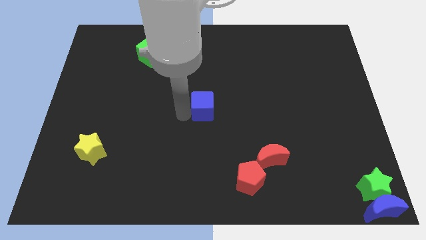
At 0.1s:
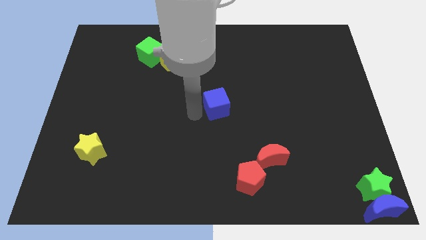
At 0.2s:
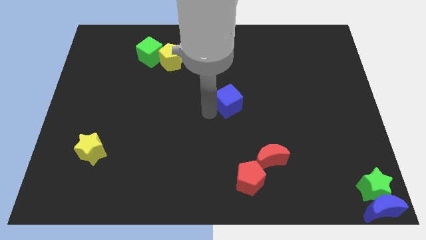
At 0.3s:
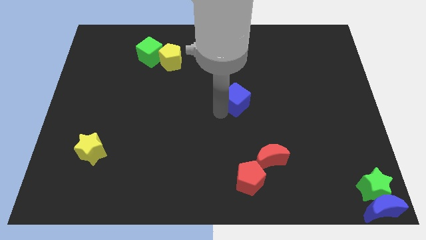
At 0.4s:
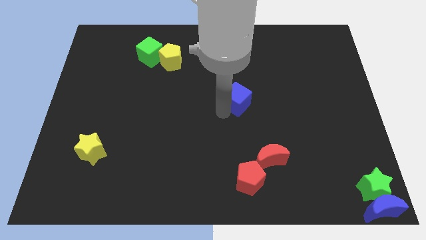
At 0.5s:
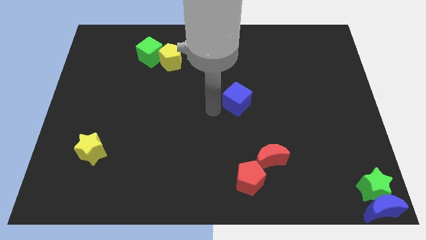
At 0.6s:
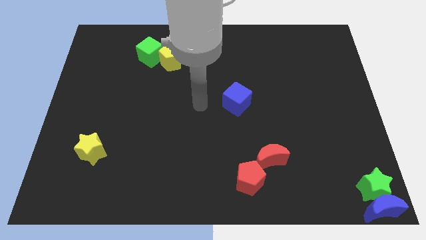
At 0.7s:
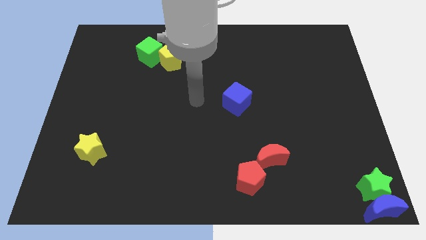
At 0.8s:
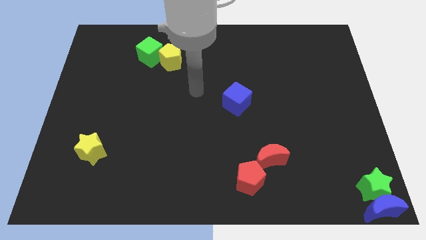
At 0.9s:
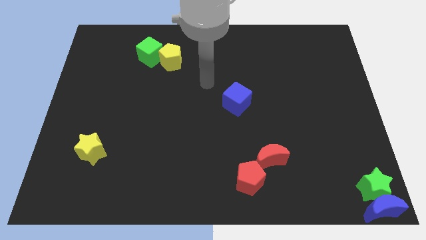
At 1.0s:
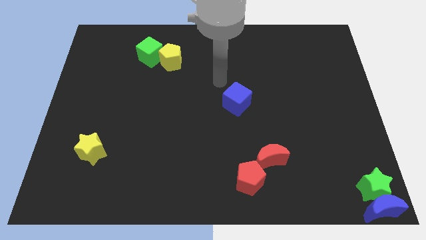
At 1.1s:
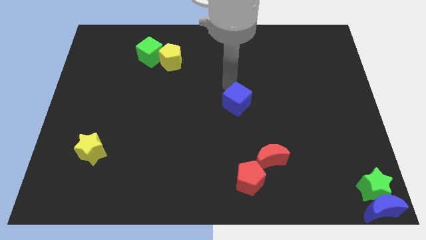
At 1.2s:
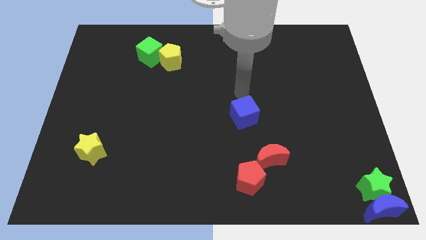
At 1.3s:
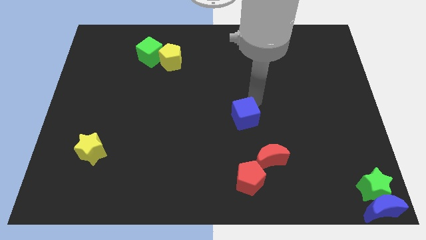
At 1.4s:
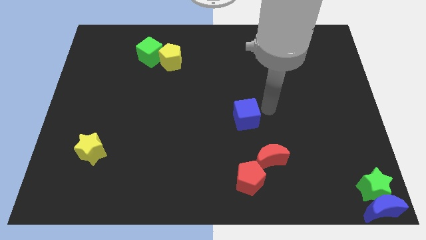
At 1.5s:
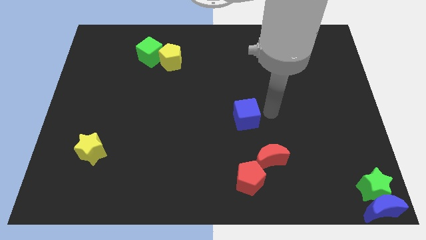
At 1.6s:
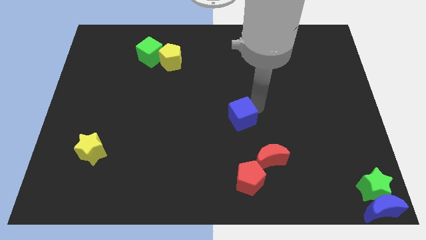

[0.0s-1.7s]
put the blue cube above the group of red blocks

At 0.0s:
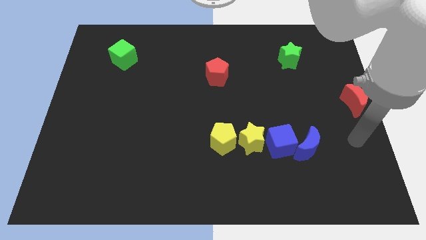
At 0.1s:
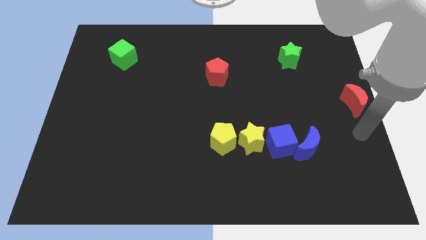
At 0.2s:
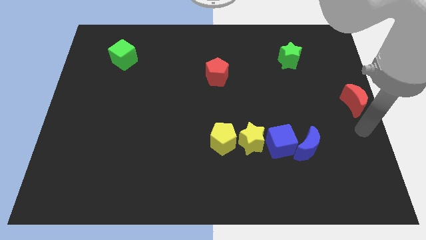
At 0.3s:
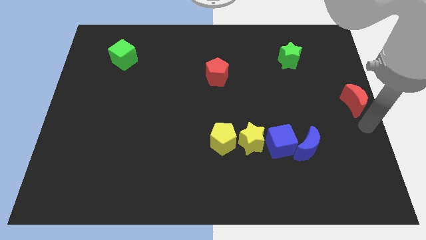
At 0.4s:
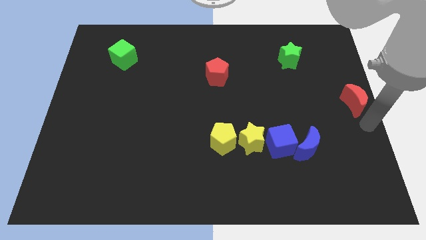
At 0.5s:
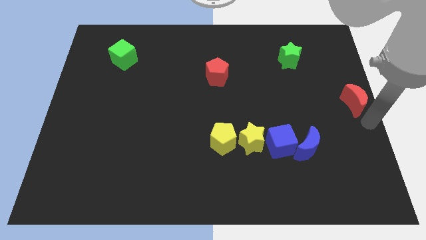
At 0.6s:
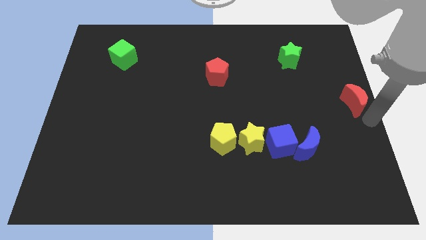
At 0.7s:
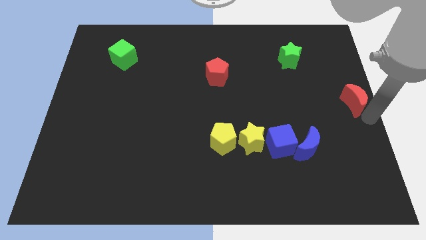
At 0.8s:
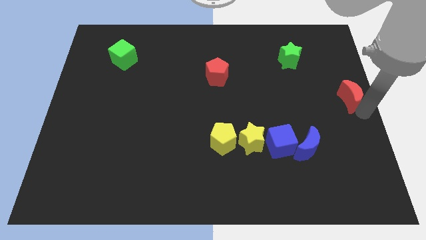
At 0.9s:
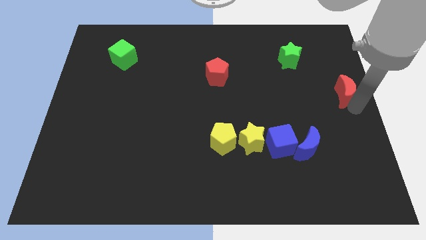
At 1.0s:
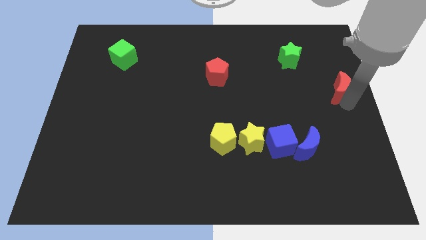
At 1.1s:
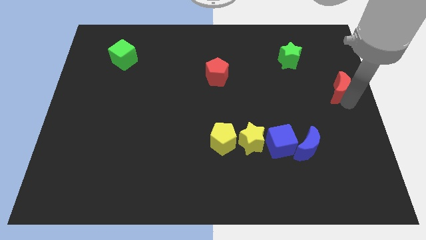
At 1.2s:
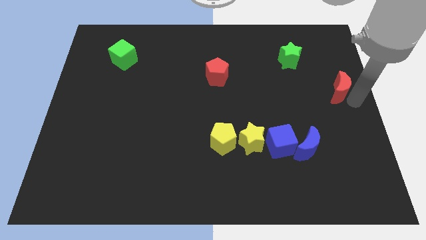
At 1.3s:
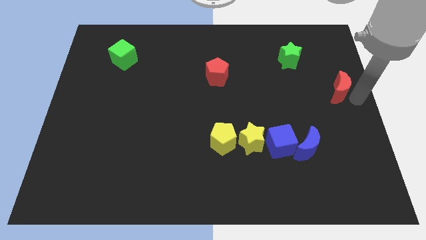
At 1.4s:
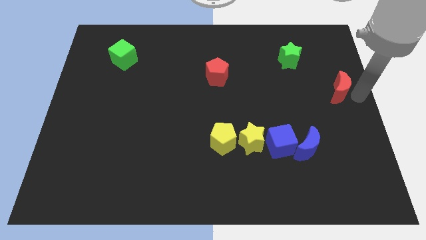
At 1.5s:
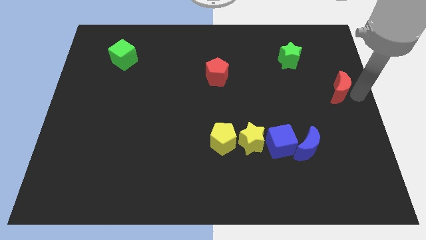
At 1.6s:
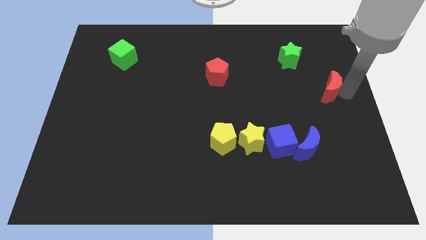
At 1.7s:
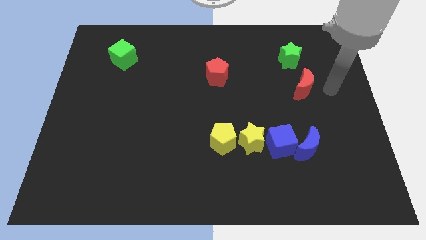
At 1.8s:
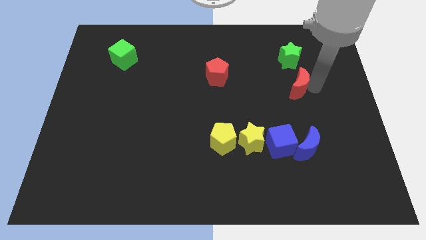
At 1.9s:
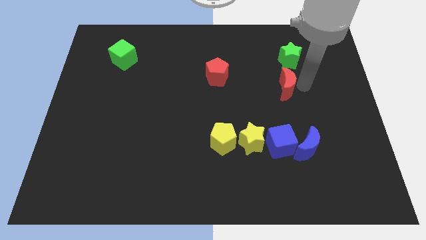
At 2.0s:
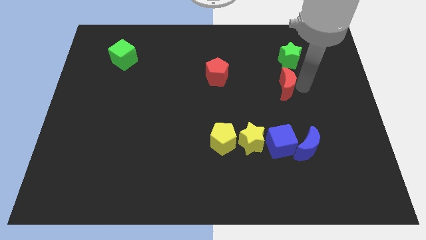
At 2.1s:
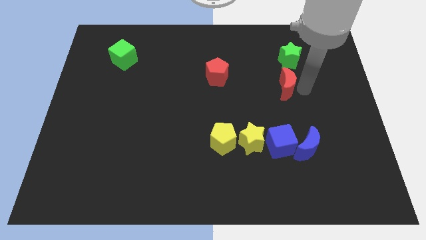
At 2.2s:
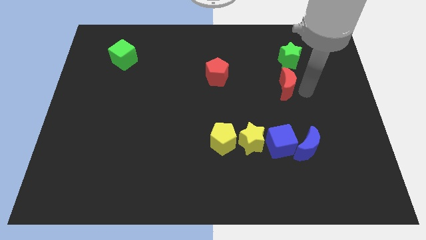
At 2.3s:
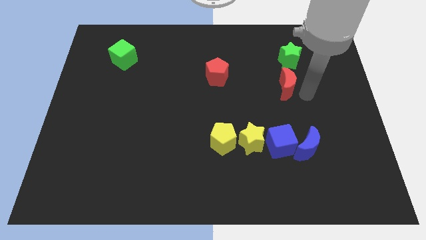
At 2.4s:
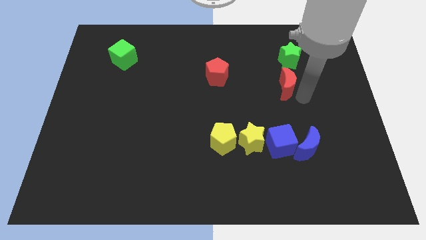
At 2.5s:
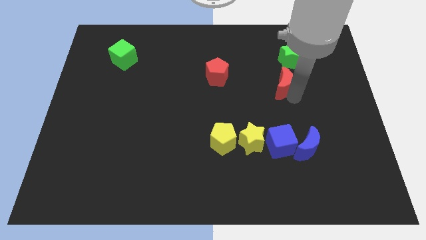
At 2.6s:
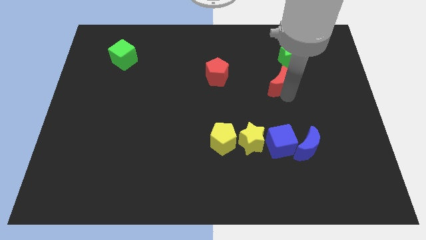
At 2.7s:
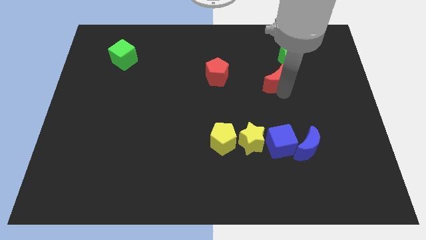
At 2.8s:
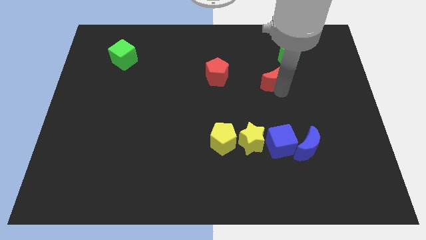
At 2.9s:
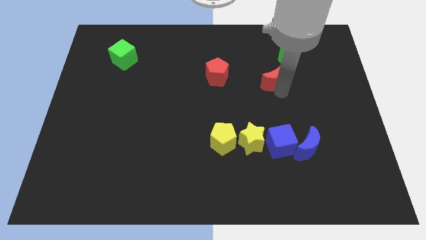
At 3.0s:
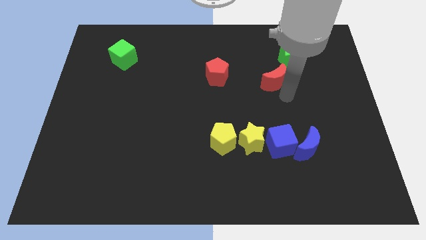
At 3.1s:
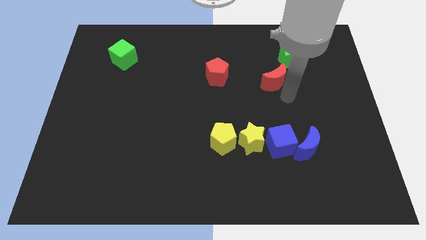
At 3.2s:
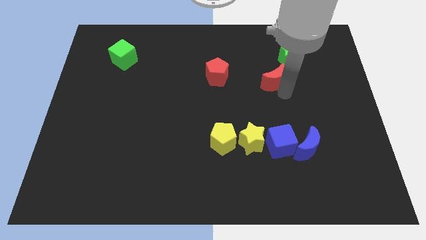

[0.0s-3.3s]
put the red moon vertically at the top side of the blue cube

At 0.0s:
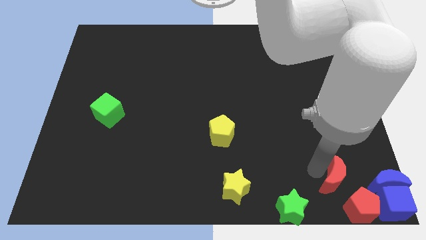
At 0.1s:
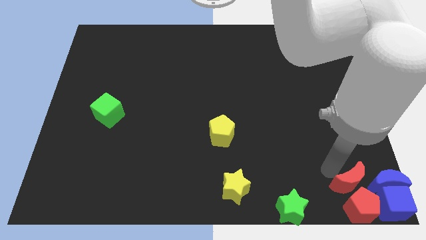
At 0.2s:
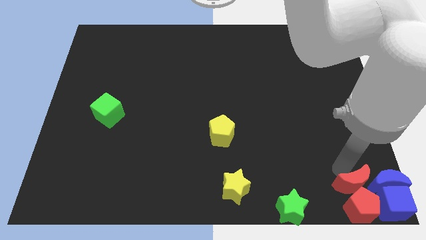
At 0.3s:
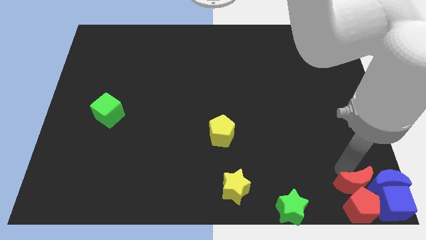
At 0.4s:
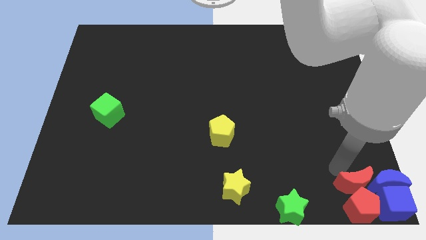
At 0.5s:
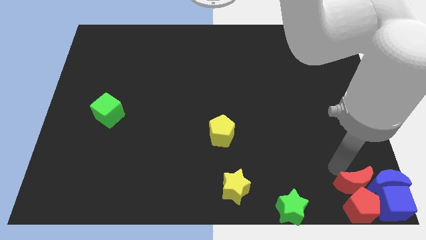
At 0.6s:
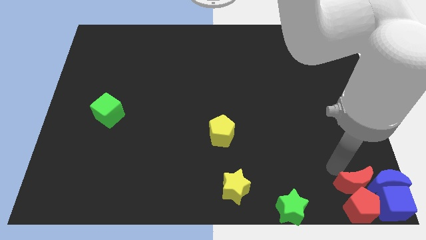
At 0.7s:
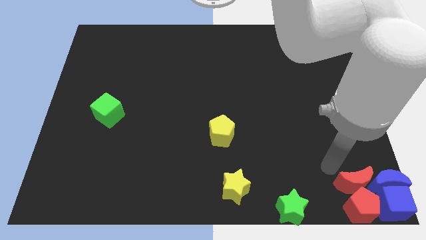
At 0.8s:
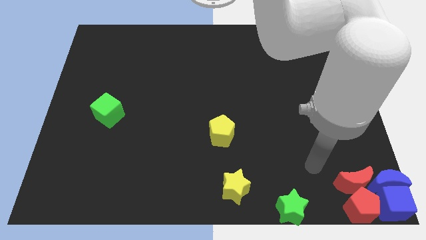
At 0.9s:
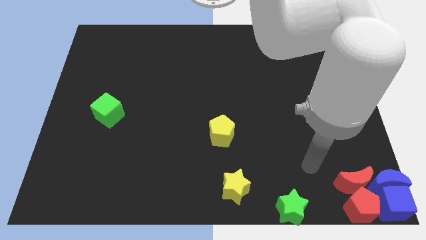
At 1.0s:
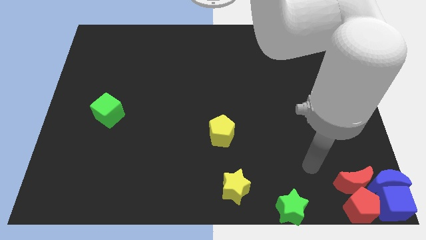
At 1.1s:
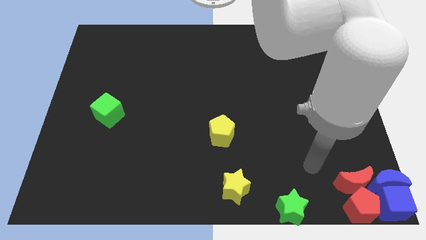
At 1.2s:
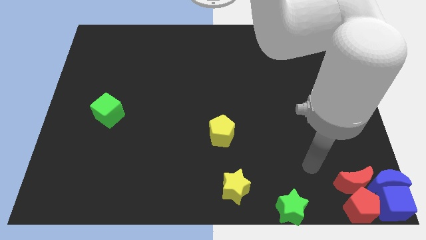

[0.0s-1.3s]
place the red moon on top of red pentagon

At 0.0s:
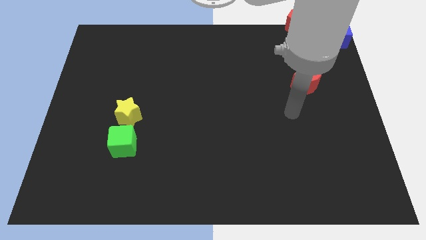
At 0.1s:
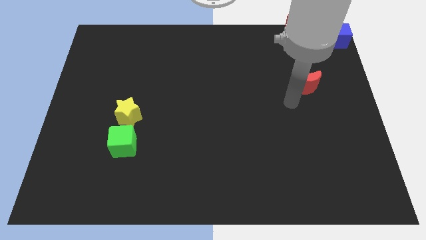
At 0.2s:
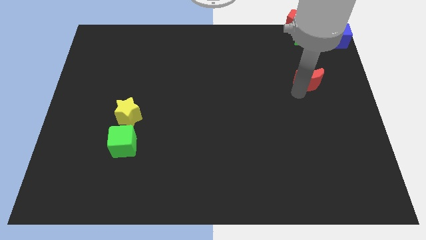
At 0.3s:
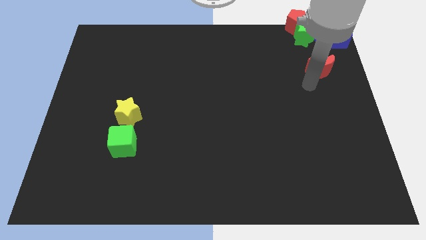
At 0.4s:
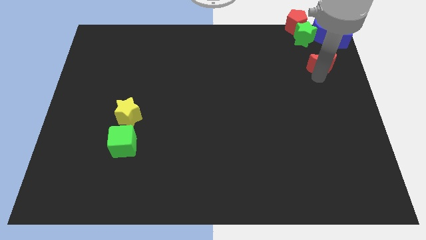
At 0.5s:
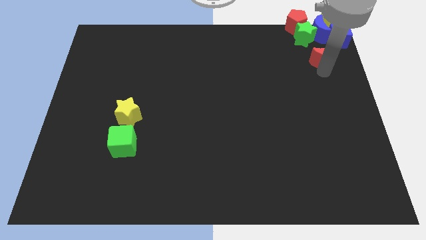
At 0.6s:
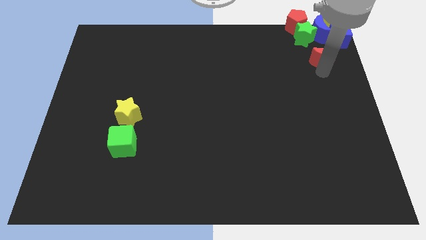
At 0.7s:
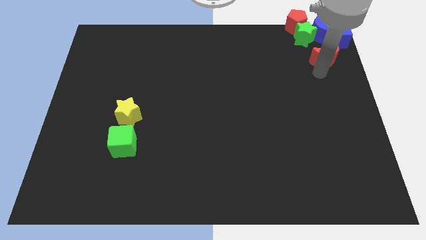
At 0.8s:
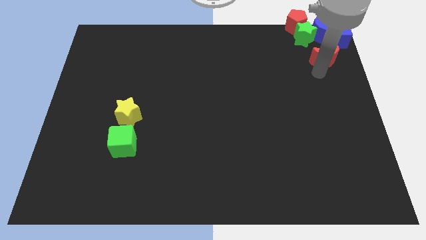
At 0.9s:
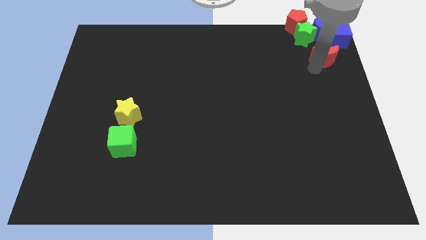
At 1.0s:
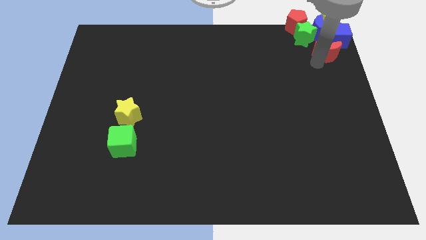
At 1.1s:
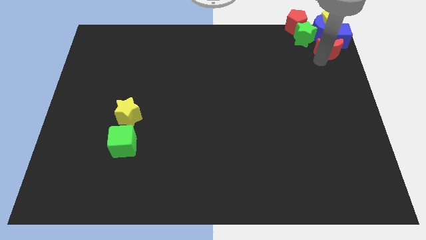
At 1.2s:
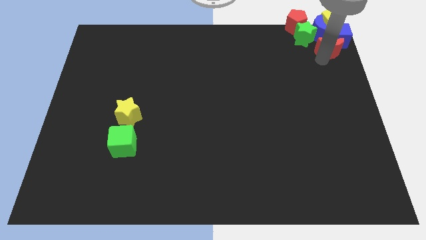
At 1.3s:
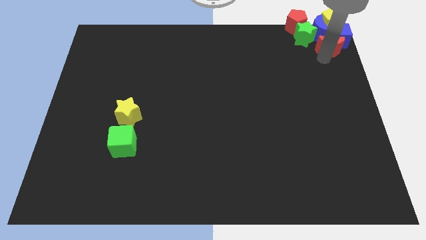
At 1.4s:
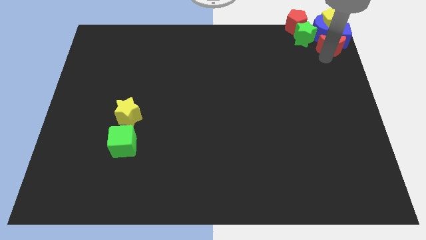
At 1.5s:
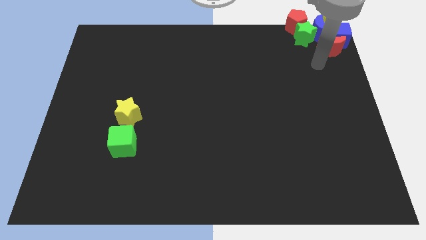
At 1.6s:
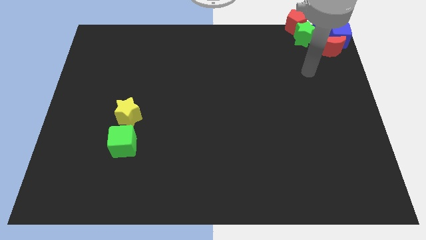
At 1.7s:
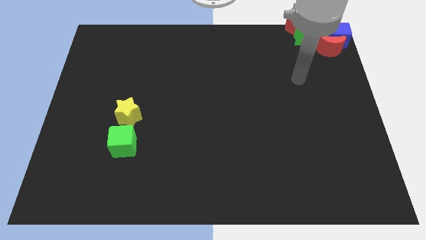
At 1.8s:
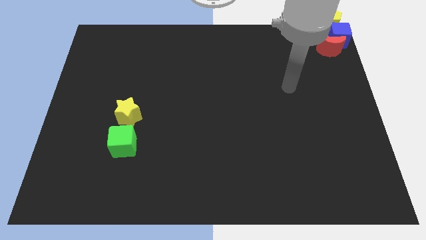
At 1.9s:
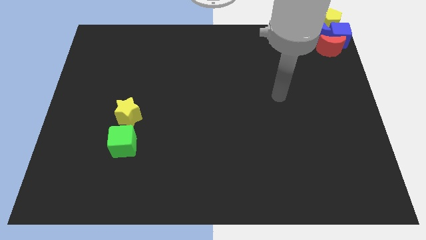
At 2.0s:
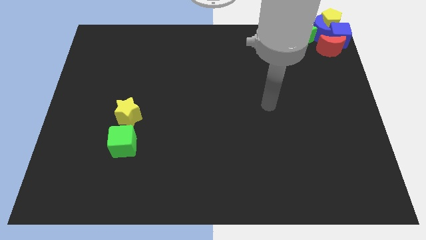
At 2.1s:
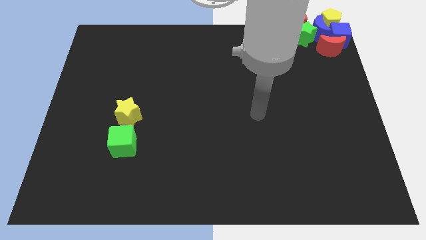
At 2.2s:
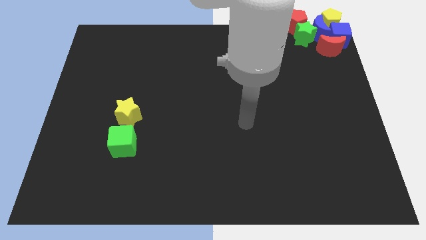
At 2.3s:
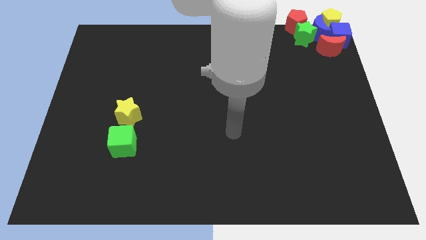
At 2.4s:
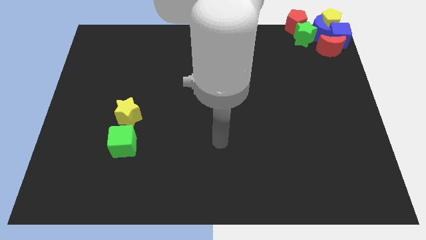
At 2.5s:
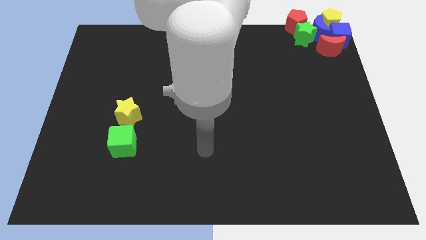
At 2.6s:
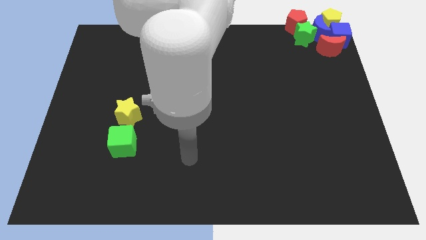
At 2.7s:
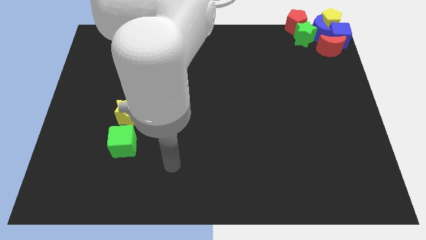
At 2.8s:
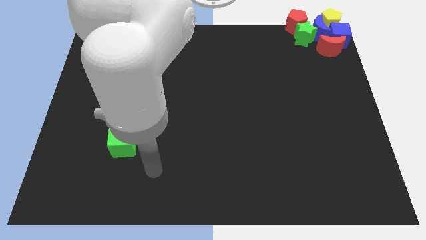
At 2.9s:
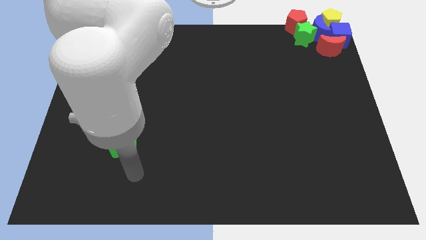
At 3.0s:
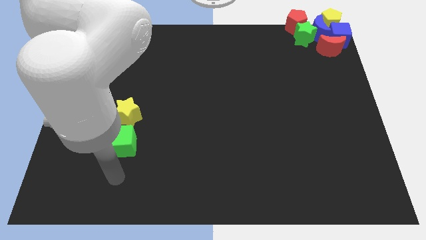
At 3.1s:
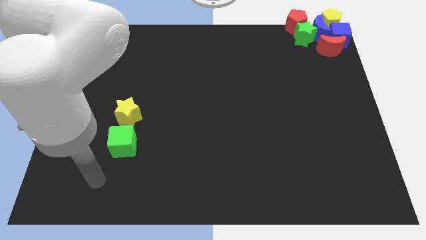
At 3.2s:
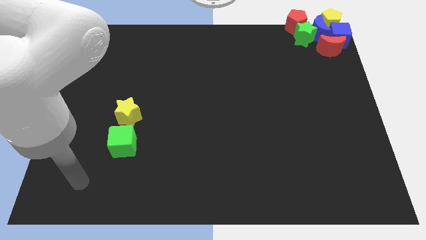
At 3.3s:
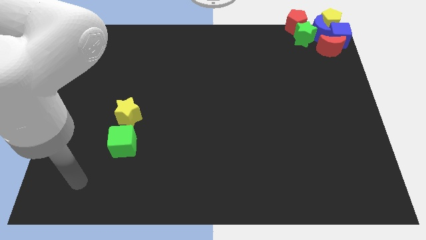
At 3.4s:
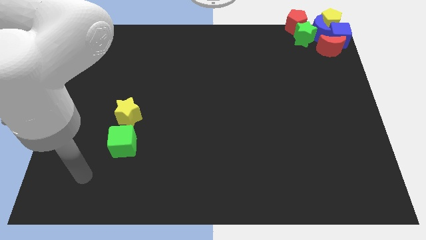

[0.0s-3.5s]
drag the red moon into the group of blocks
